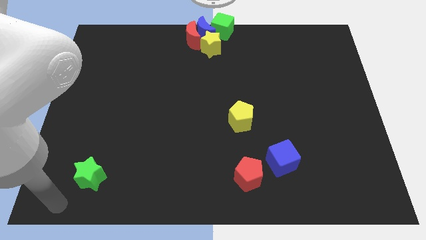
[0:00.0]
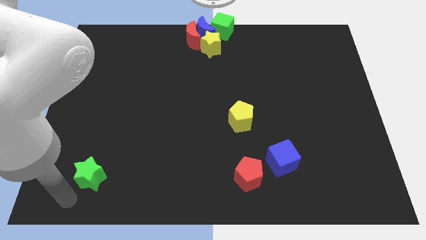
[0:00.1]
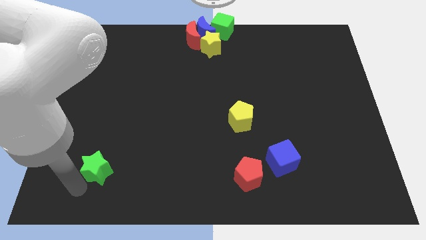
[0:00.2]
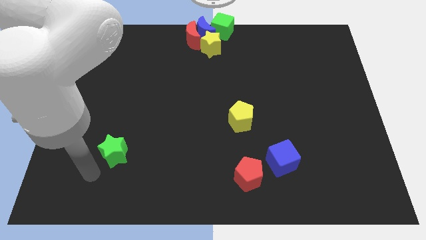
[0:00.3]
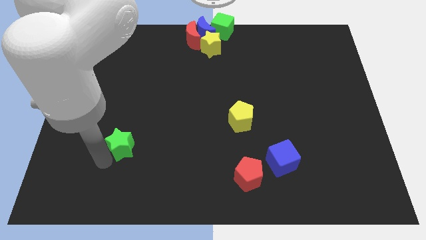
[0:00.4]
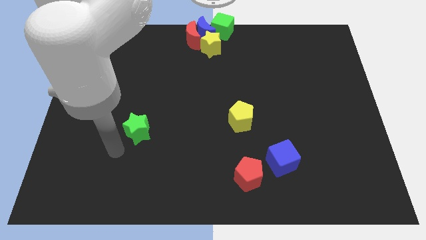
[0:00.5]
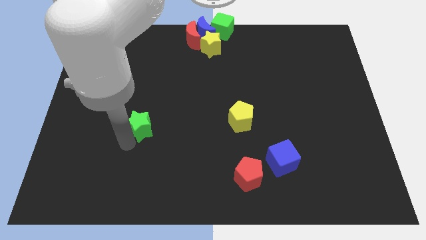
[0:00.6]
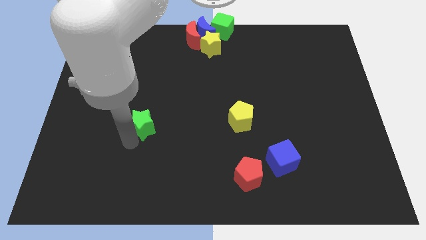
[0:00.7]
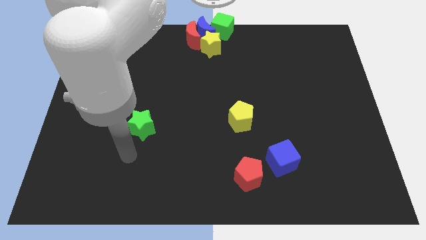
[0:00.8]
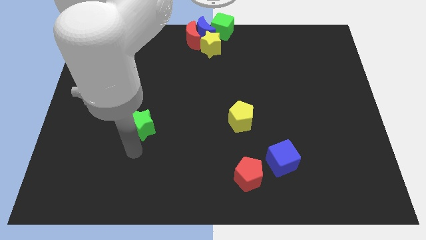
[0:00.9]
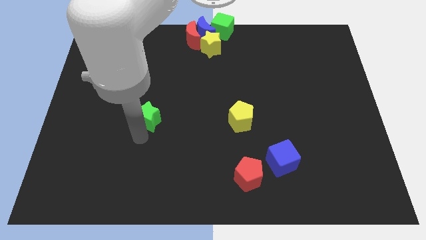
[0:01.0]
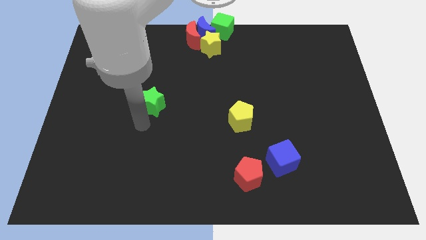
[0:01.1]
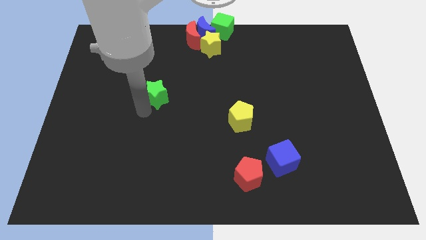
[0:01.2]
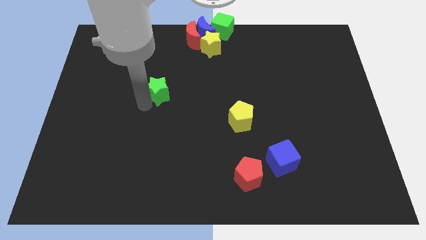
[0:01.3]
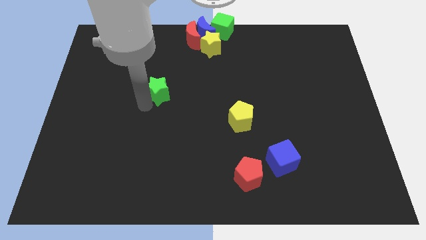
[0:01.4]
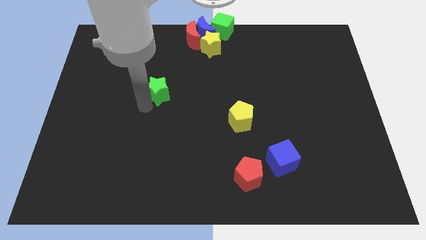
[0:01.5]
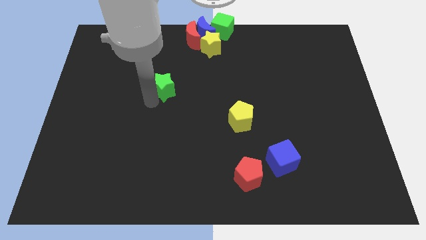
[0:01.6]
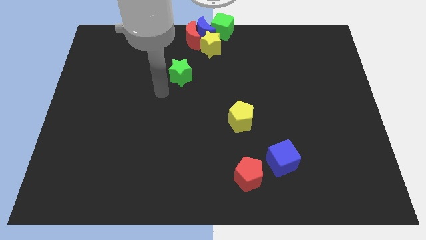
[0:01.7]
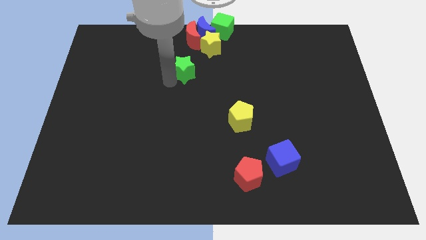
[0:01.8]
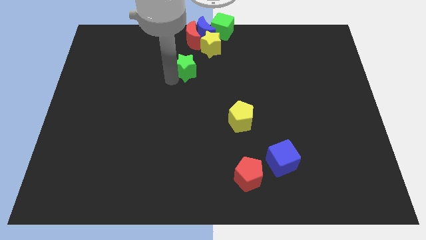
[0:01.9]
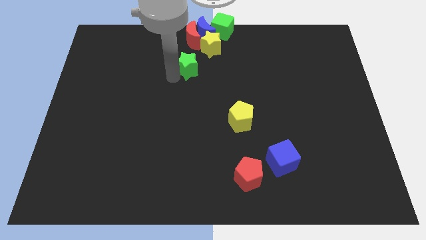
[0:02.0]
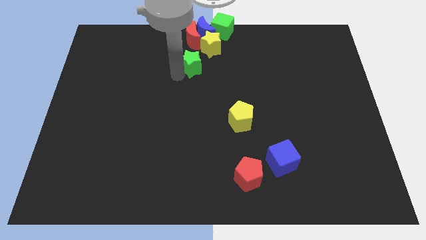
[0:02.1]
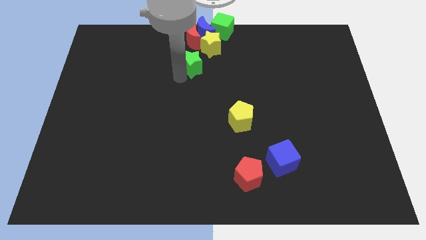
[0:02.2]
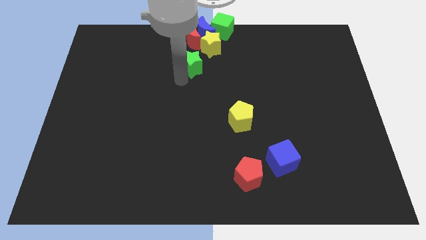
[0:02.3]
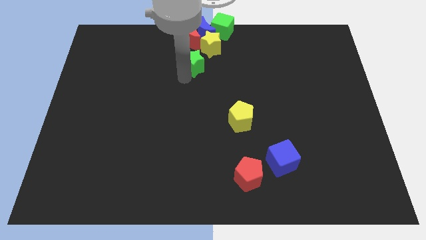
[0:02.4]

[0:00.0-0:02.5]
place the green star parallel to the bottom of the yellow star

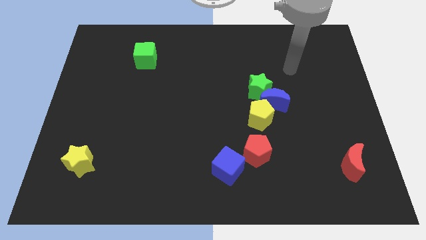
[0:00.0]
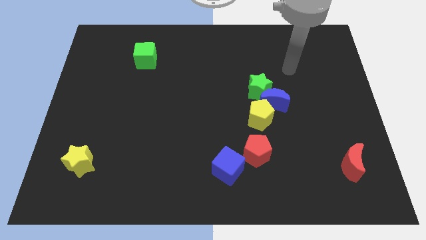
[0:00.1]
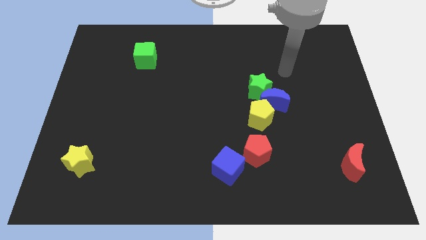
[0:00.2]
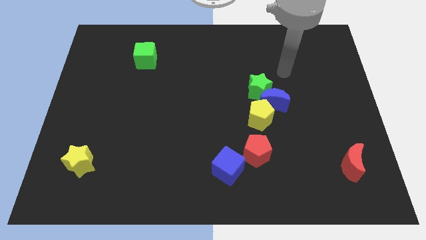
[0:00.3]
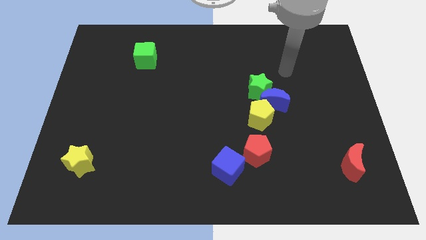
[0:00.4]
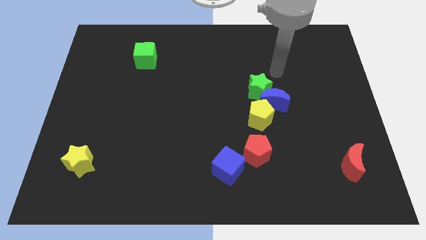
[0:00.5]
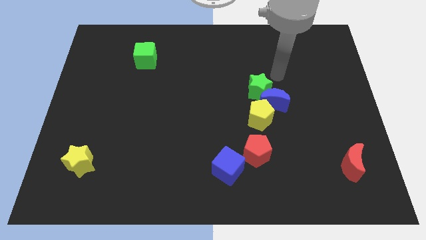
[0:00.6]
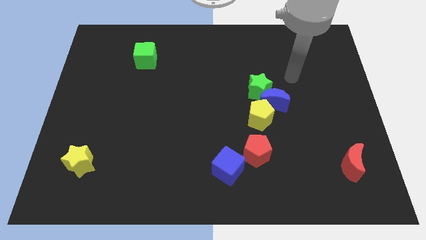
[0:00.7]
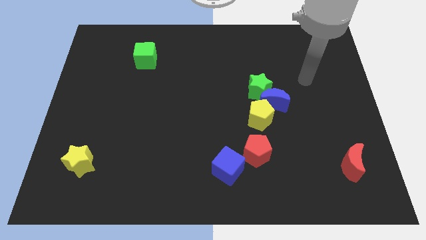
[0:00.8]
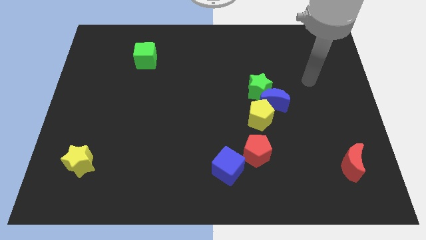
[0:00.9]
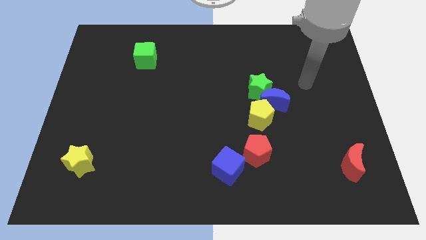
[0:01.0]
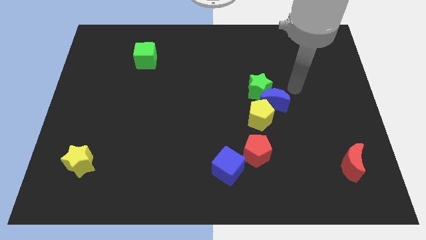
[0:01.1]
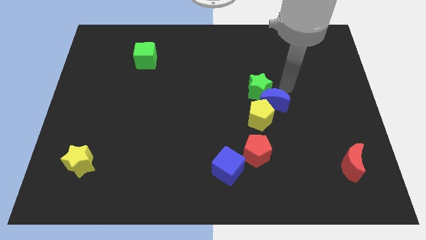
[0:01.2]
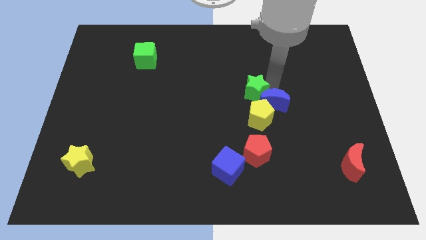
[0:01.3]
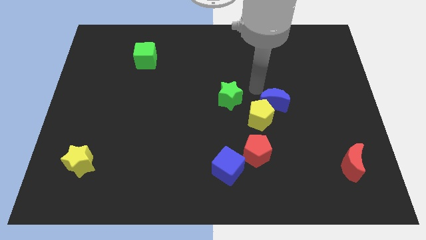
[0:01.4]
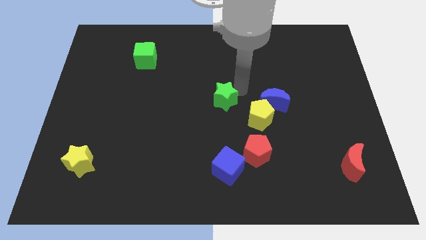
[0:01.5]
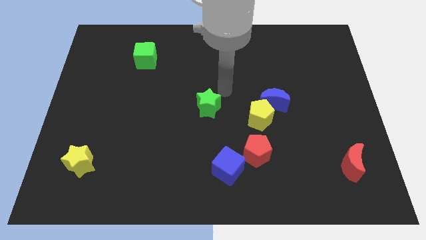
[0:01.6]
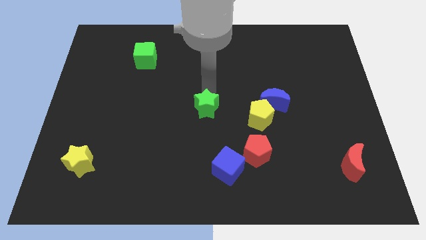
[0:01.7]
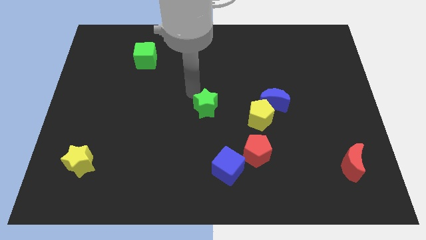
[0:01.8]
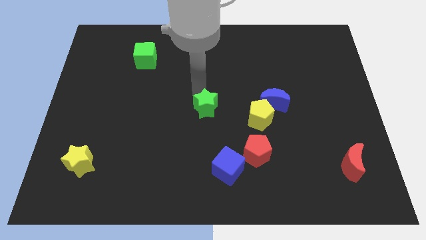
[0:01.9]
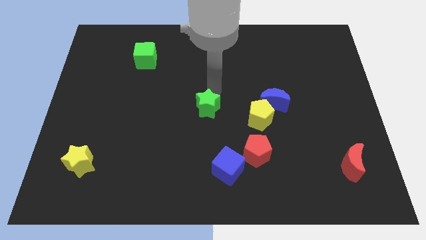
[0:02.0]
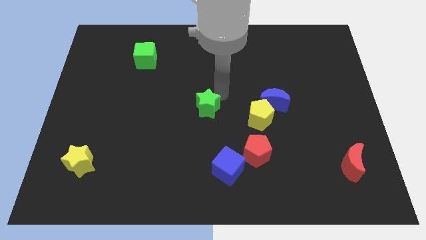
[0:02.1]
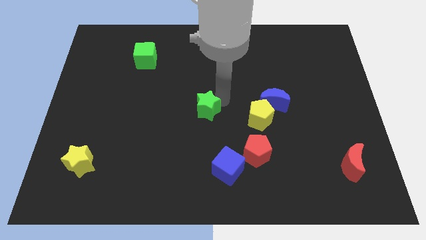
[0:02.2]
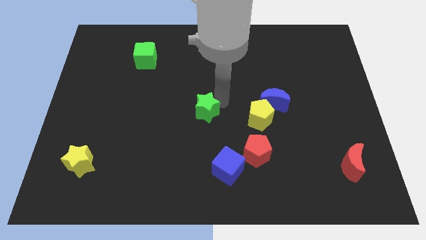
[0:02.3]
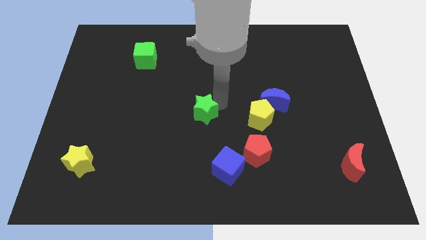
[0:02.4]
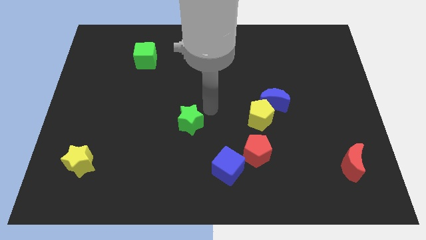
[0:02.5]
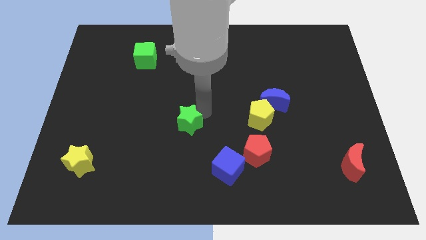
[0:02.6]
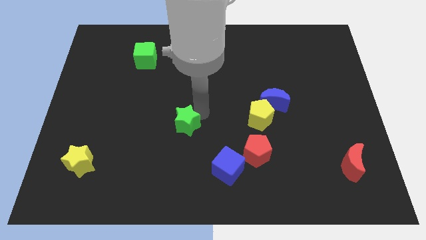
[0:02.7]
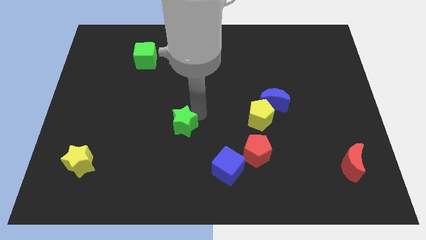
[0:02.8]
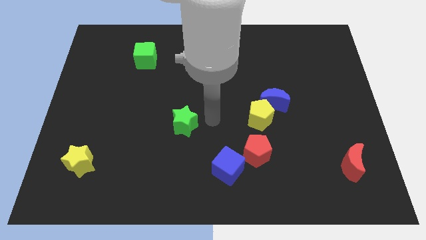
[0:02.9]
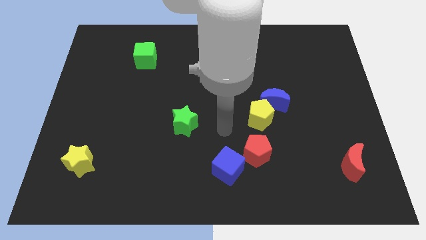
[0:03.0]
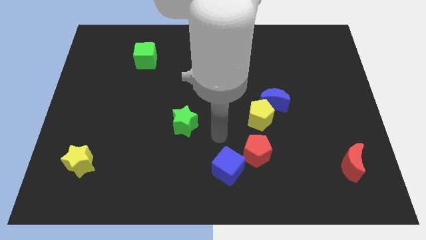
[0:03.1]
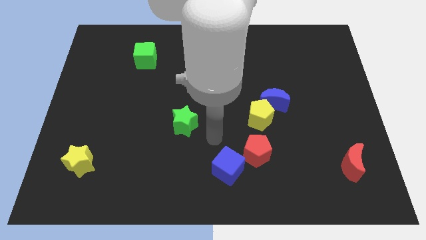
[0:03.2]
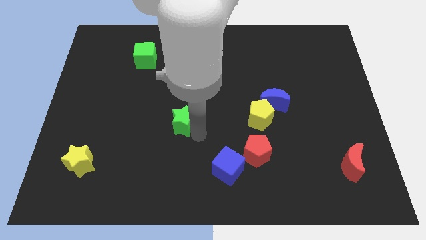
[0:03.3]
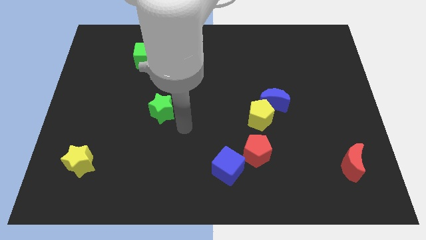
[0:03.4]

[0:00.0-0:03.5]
move the green star diagonally on the bottom right side of the green cube

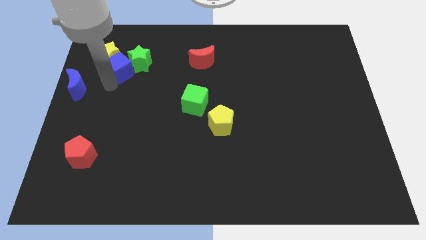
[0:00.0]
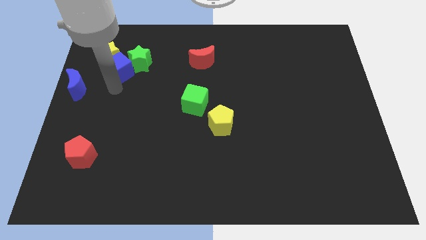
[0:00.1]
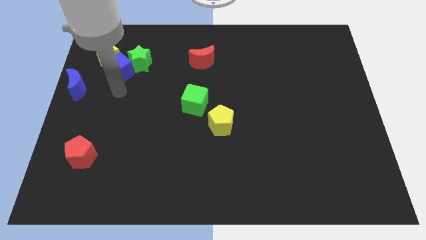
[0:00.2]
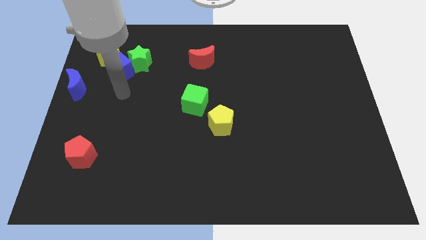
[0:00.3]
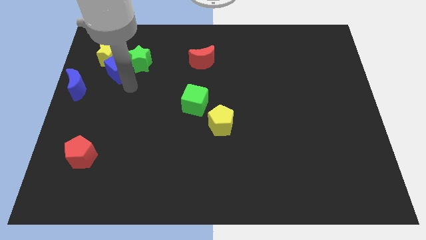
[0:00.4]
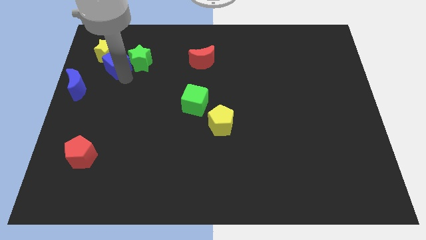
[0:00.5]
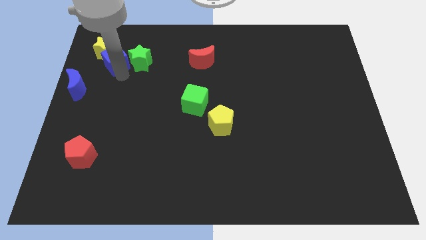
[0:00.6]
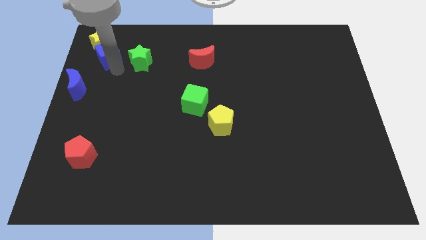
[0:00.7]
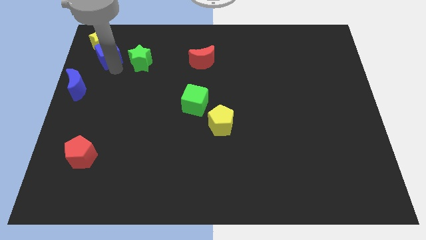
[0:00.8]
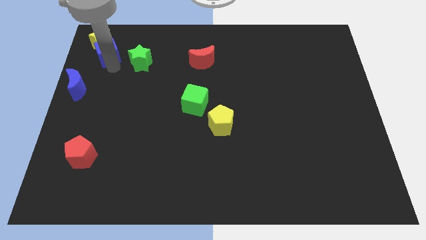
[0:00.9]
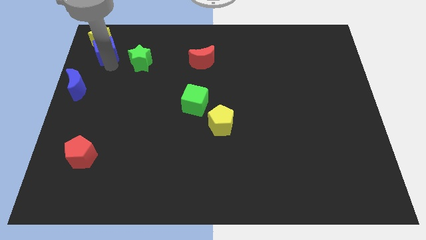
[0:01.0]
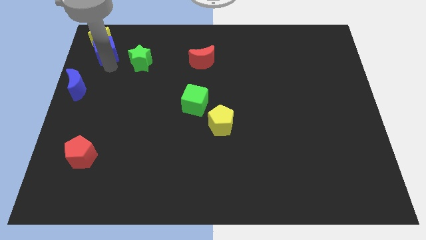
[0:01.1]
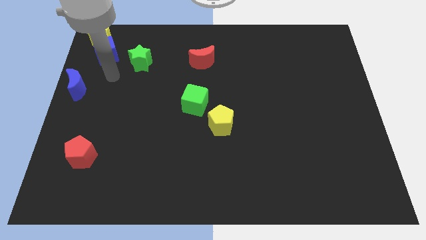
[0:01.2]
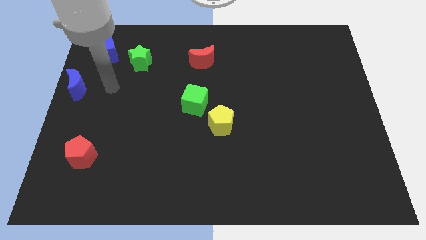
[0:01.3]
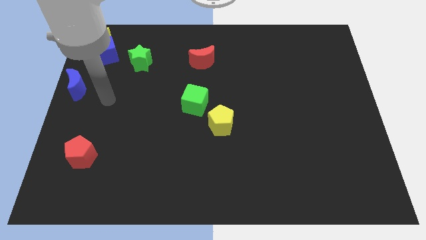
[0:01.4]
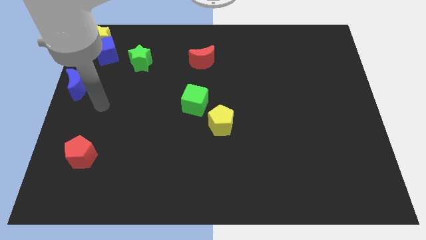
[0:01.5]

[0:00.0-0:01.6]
move the blue cube and the yellow star at the top left

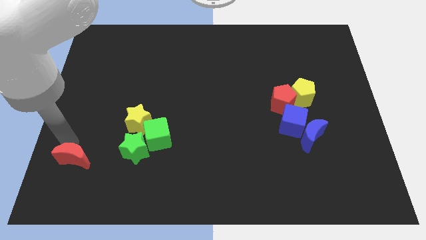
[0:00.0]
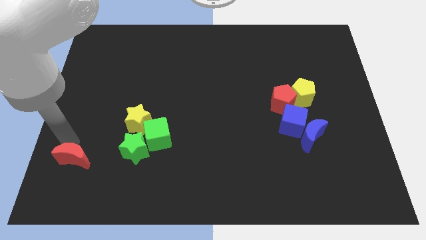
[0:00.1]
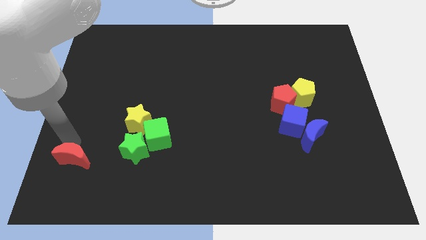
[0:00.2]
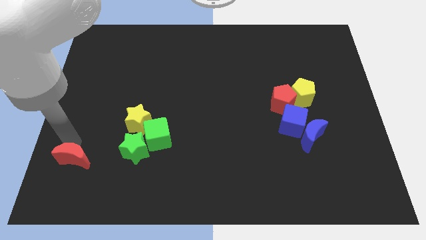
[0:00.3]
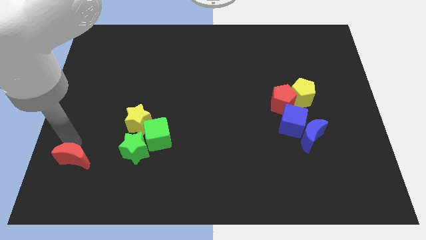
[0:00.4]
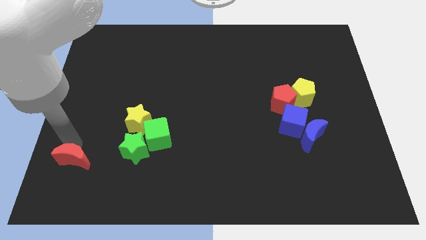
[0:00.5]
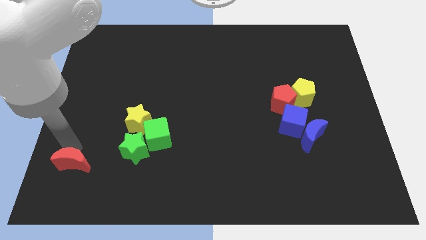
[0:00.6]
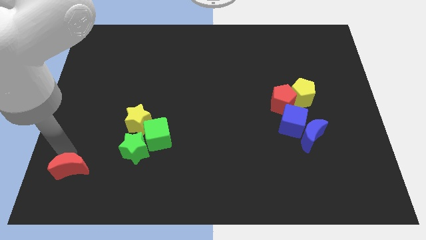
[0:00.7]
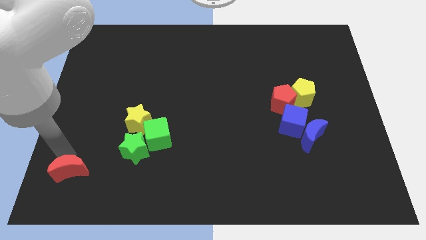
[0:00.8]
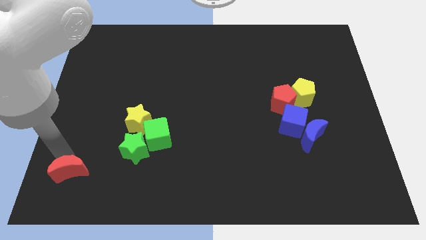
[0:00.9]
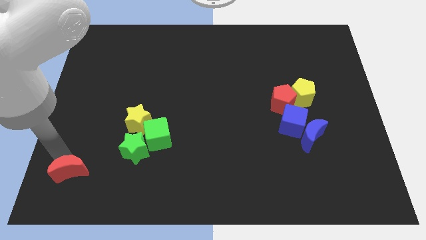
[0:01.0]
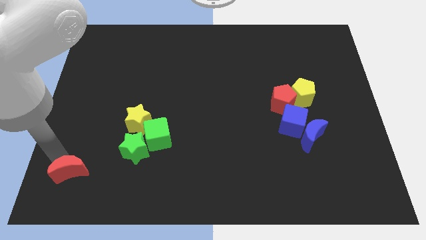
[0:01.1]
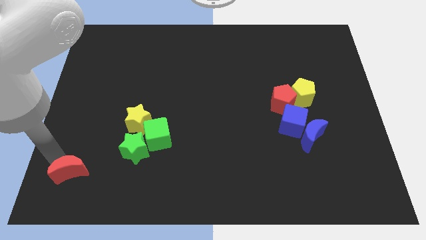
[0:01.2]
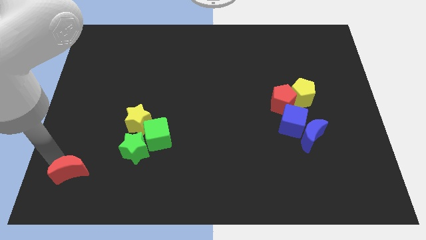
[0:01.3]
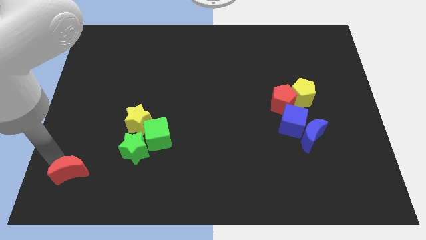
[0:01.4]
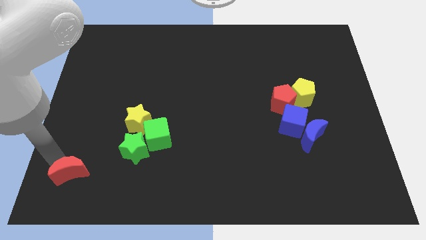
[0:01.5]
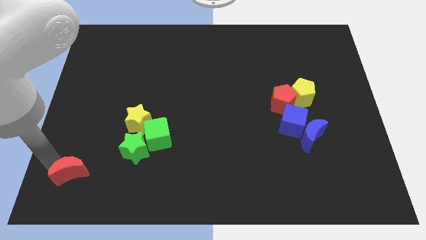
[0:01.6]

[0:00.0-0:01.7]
push red moon slightly down
